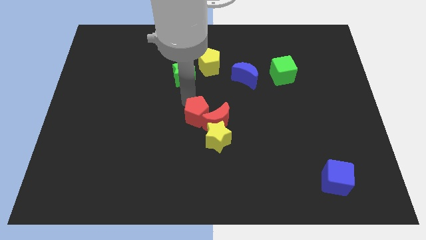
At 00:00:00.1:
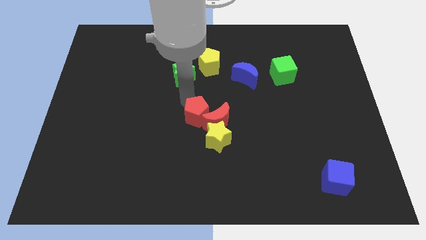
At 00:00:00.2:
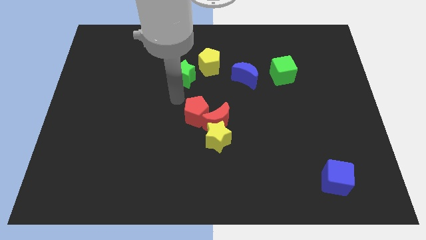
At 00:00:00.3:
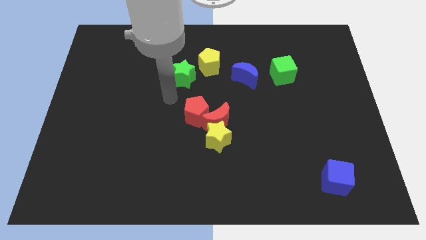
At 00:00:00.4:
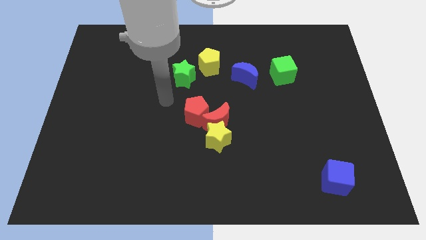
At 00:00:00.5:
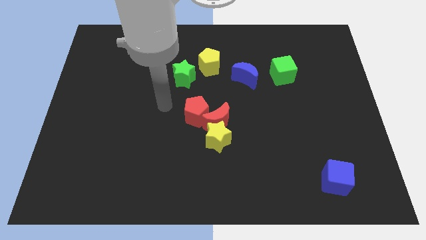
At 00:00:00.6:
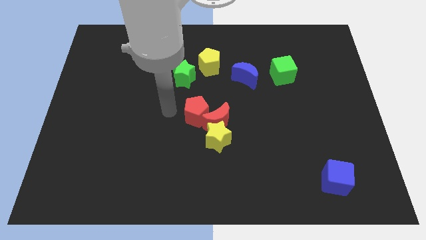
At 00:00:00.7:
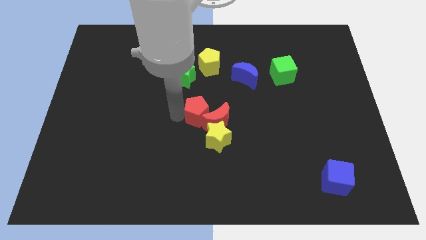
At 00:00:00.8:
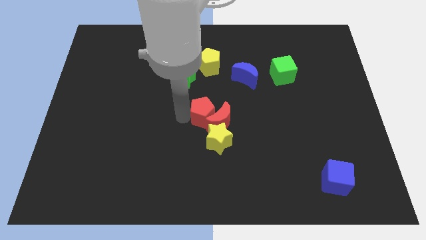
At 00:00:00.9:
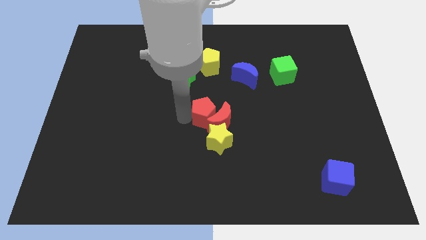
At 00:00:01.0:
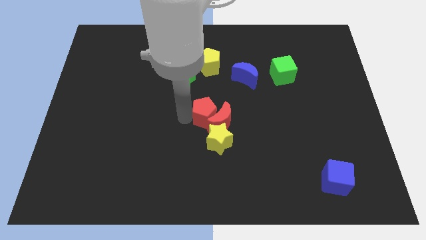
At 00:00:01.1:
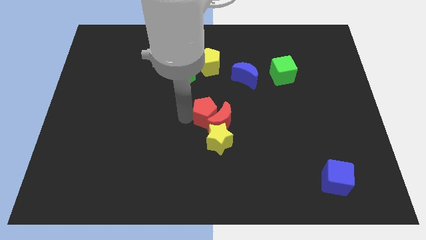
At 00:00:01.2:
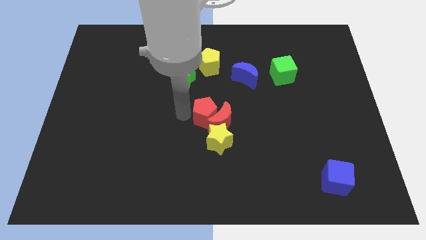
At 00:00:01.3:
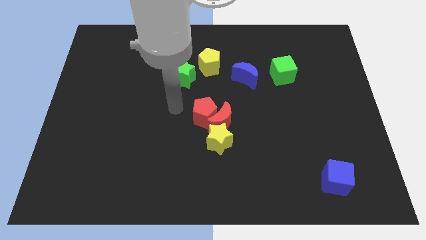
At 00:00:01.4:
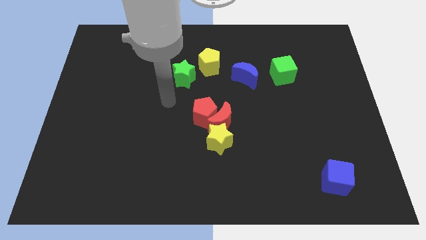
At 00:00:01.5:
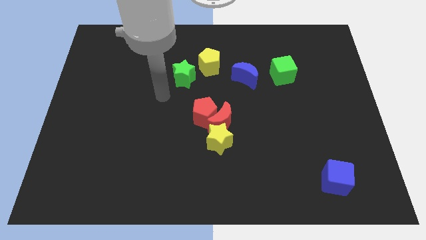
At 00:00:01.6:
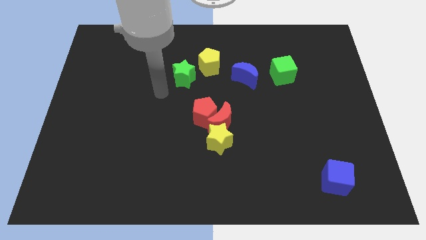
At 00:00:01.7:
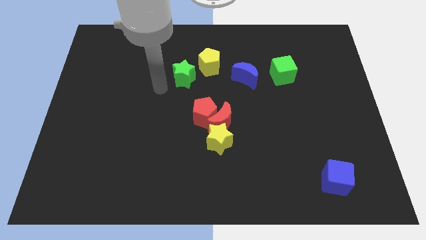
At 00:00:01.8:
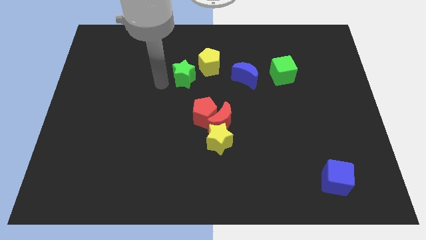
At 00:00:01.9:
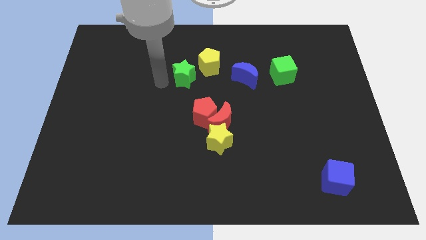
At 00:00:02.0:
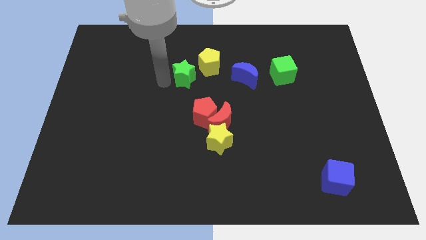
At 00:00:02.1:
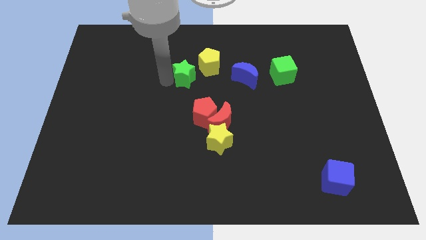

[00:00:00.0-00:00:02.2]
move the red pentagon into the red moon

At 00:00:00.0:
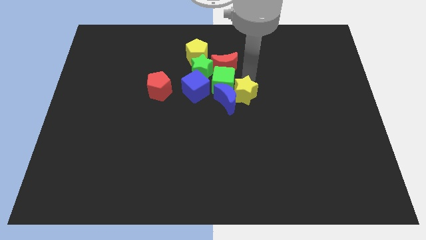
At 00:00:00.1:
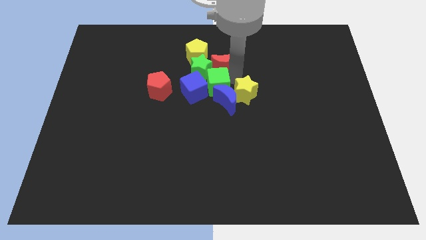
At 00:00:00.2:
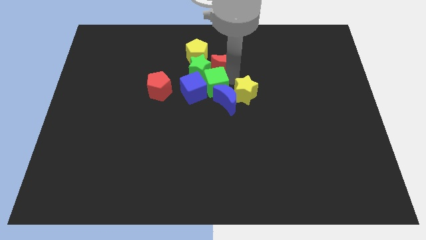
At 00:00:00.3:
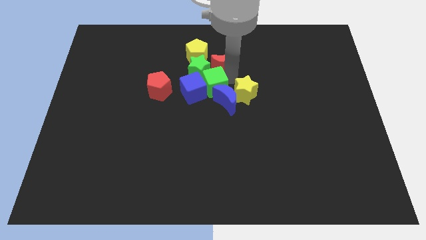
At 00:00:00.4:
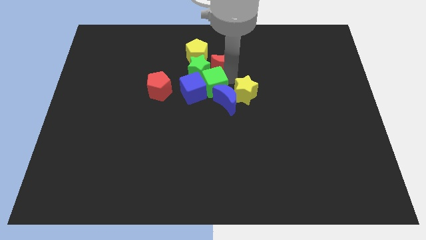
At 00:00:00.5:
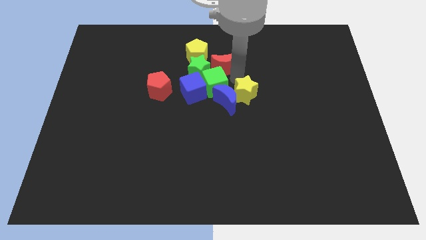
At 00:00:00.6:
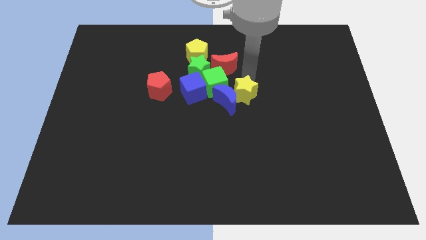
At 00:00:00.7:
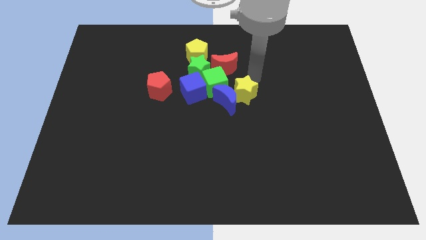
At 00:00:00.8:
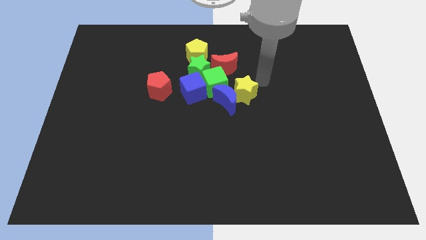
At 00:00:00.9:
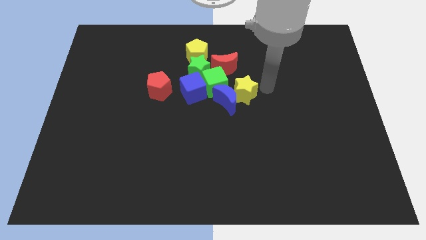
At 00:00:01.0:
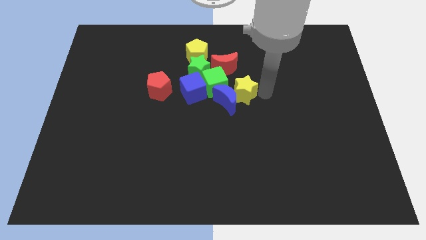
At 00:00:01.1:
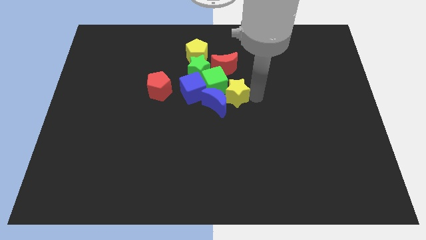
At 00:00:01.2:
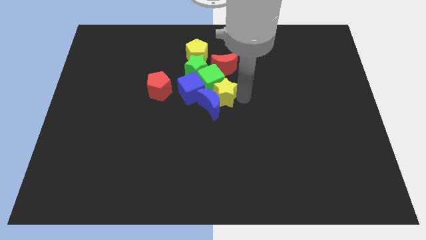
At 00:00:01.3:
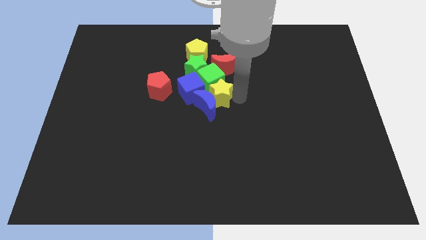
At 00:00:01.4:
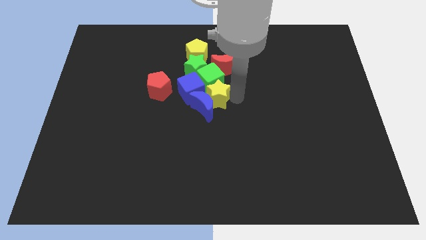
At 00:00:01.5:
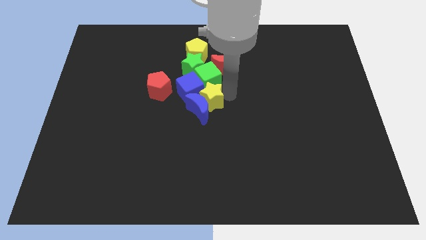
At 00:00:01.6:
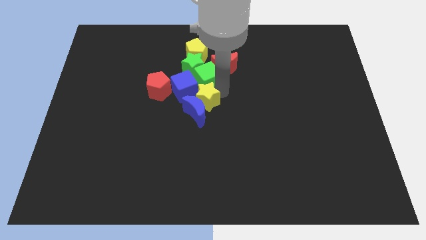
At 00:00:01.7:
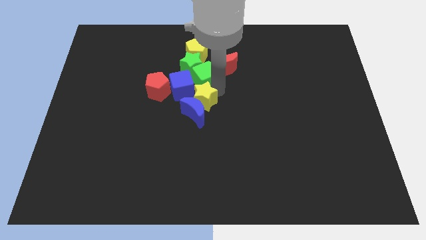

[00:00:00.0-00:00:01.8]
put the yellow star into the blue cube

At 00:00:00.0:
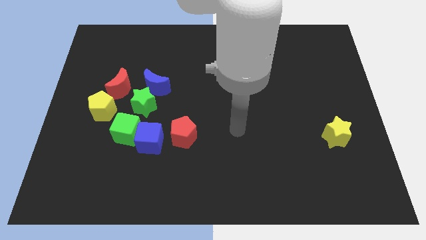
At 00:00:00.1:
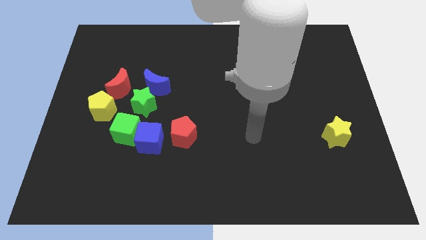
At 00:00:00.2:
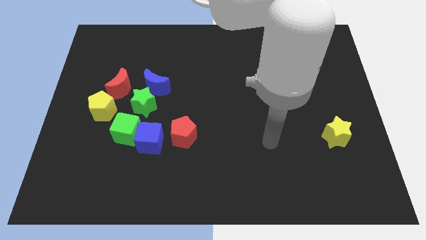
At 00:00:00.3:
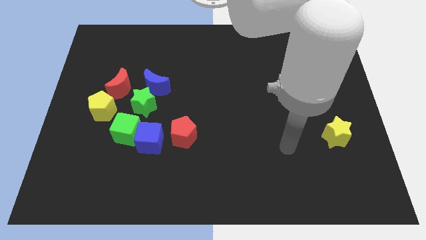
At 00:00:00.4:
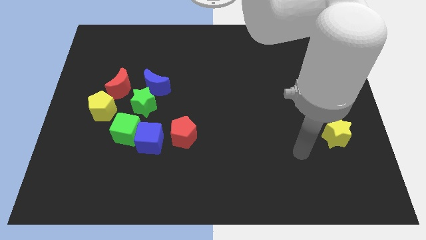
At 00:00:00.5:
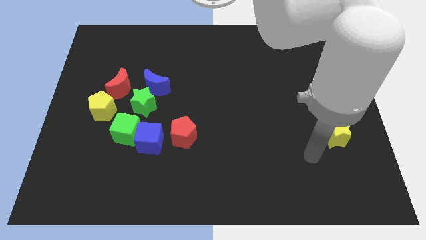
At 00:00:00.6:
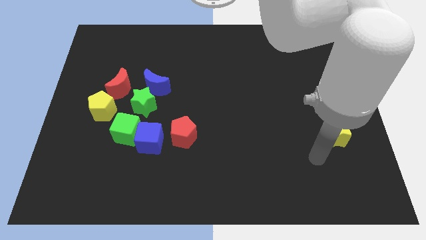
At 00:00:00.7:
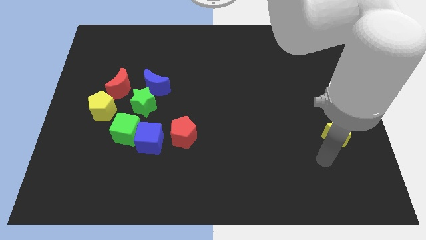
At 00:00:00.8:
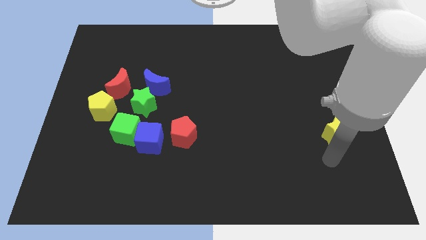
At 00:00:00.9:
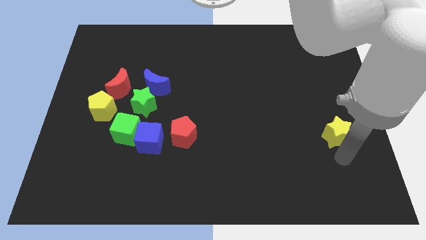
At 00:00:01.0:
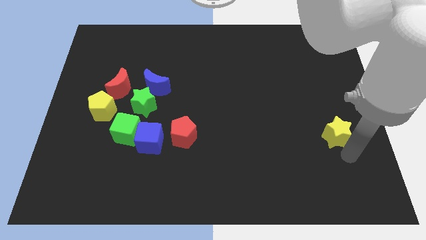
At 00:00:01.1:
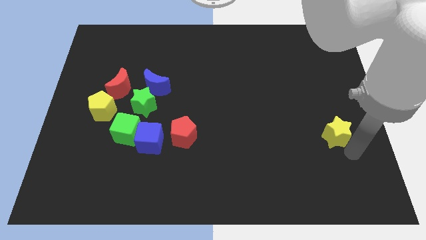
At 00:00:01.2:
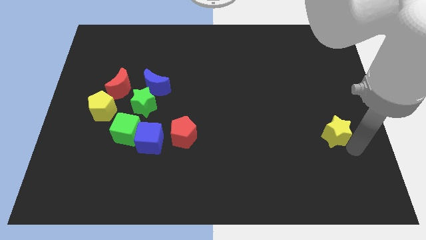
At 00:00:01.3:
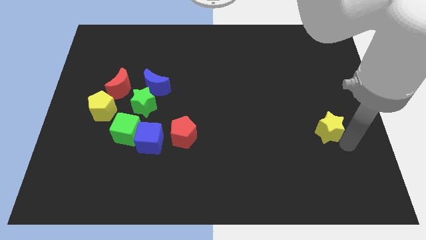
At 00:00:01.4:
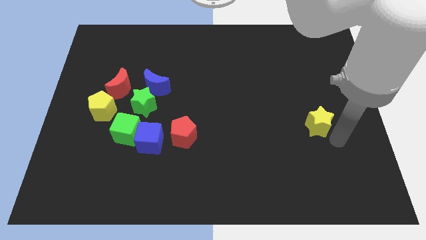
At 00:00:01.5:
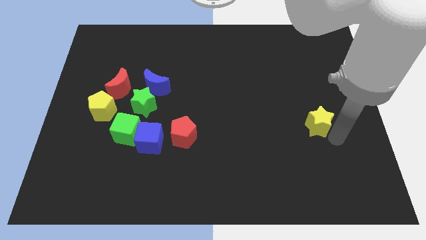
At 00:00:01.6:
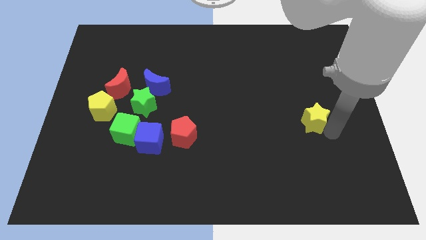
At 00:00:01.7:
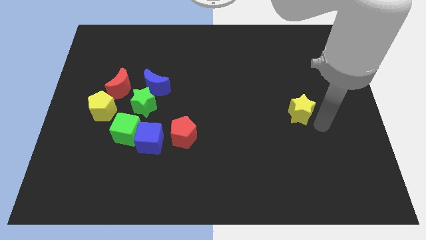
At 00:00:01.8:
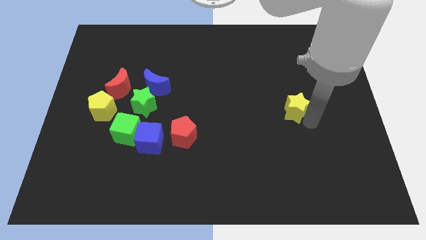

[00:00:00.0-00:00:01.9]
push the yellow star upwards

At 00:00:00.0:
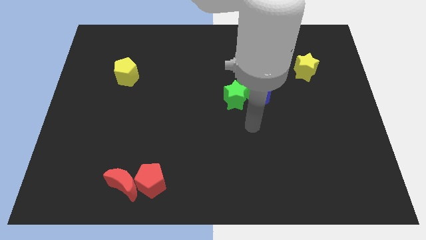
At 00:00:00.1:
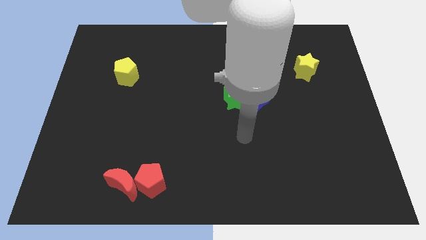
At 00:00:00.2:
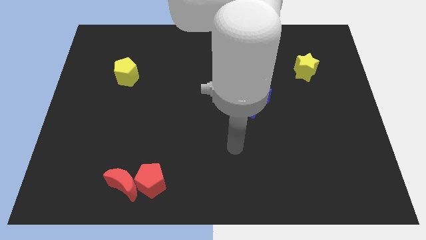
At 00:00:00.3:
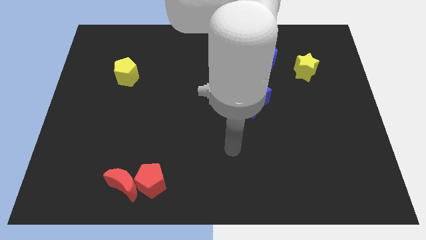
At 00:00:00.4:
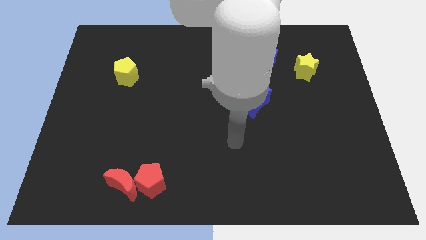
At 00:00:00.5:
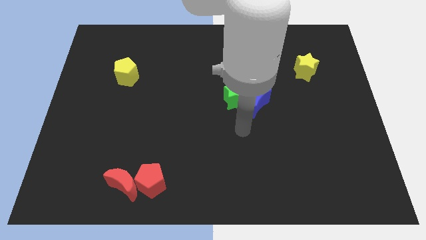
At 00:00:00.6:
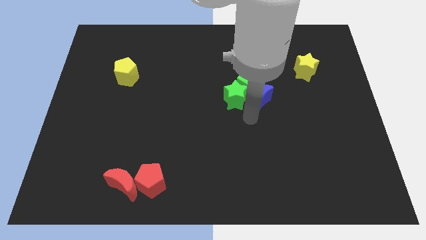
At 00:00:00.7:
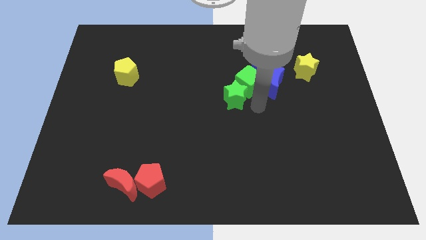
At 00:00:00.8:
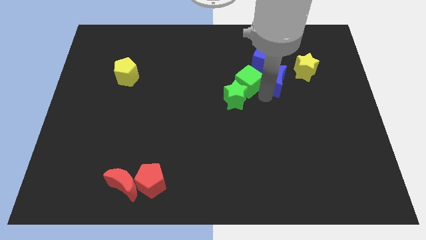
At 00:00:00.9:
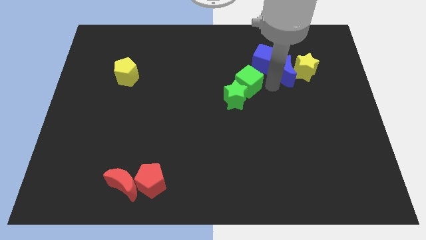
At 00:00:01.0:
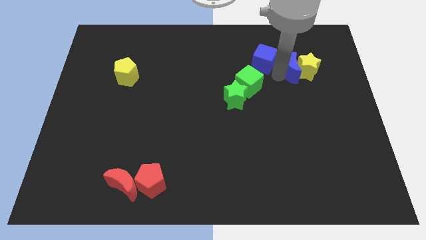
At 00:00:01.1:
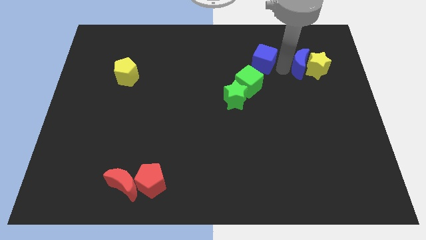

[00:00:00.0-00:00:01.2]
push the blue crescent into the left of the yellow star

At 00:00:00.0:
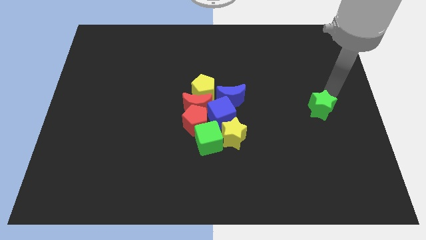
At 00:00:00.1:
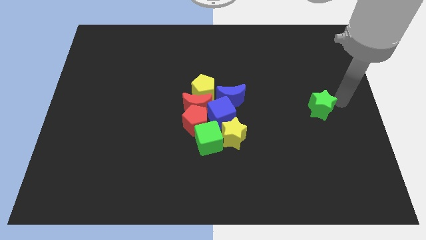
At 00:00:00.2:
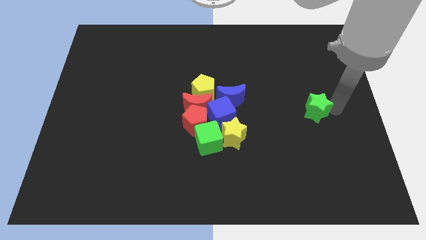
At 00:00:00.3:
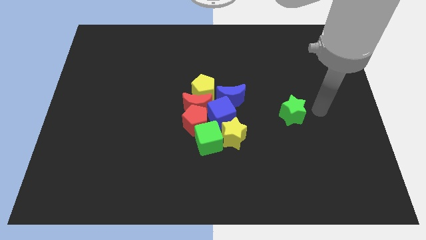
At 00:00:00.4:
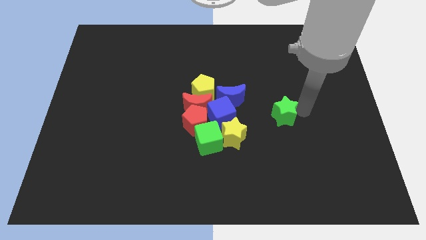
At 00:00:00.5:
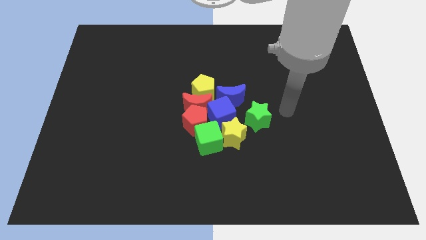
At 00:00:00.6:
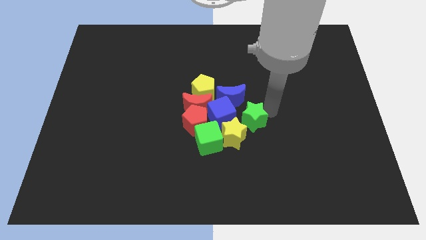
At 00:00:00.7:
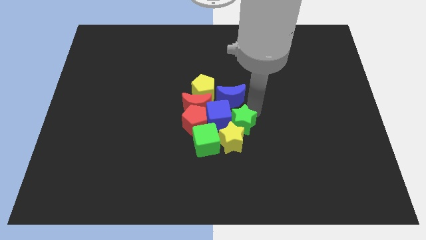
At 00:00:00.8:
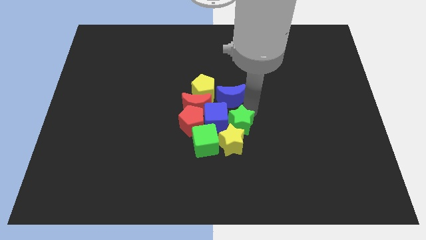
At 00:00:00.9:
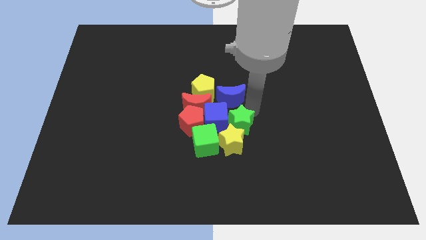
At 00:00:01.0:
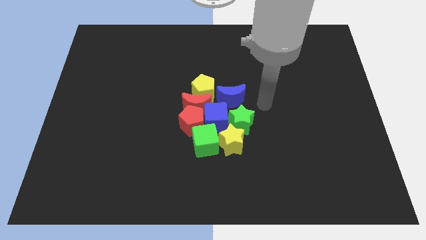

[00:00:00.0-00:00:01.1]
push the green star horizontally into the blue cube

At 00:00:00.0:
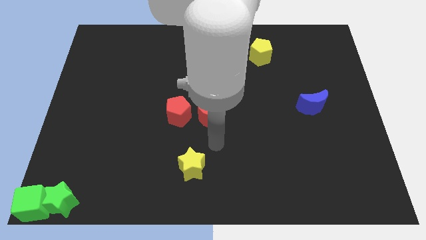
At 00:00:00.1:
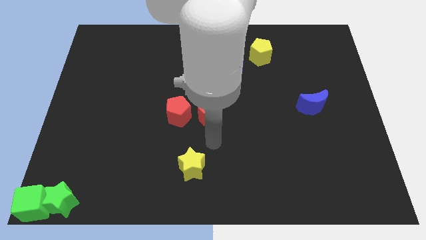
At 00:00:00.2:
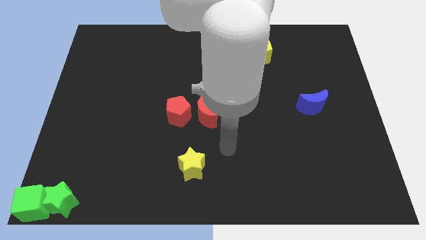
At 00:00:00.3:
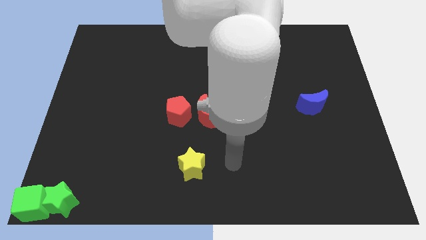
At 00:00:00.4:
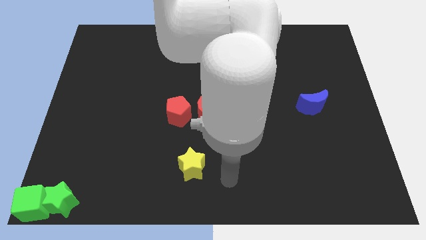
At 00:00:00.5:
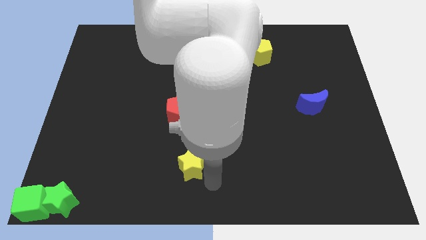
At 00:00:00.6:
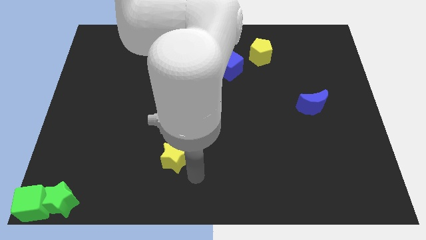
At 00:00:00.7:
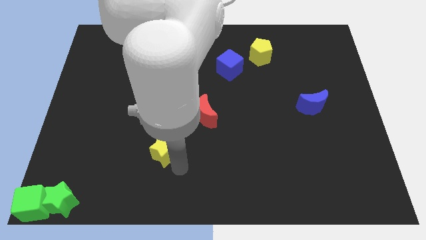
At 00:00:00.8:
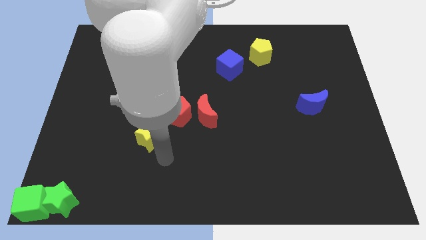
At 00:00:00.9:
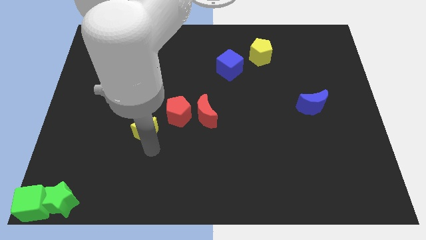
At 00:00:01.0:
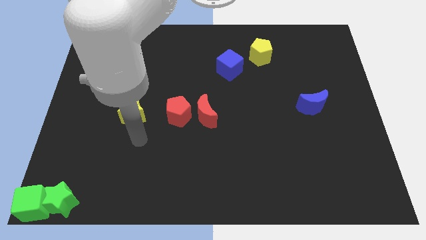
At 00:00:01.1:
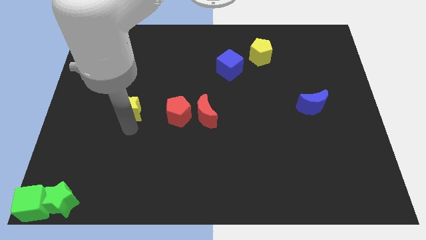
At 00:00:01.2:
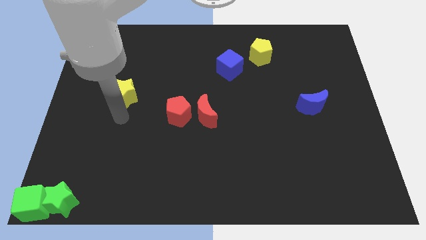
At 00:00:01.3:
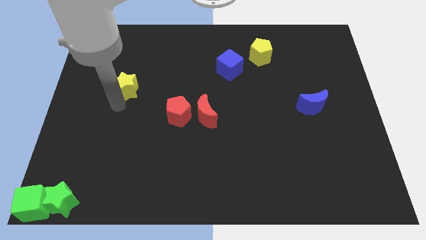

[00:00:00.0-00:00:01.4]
push yellow star upwards
